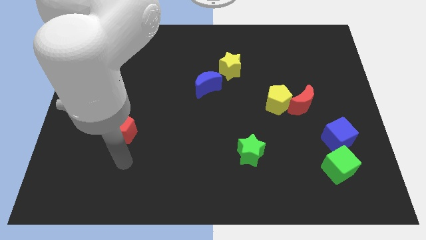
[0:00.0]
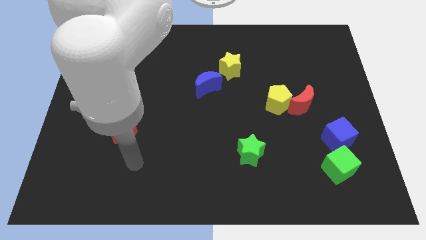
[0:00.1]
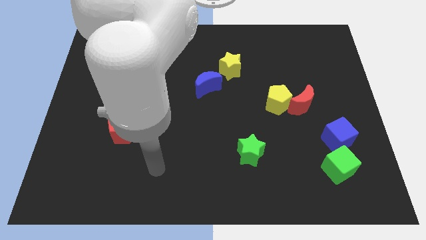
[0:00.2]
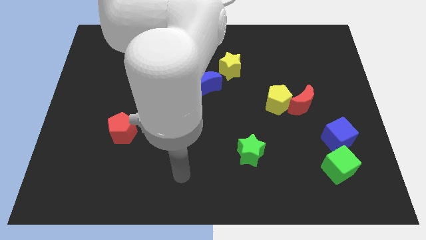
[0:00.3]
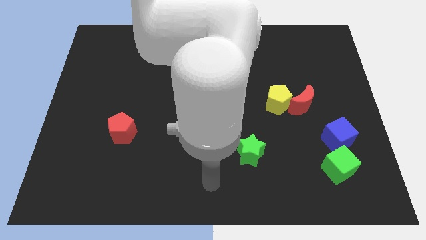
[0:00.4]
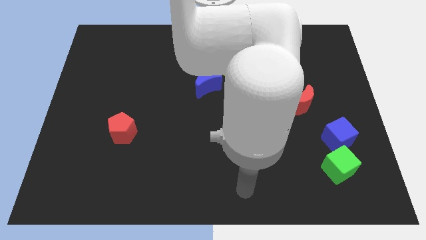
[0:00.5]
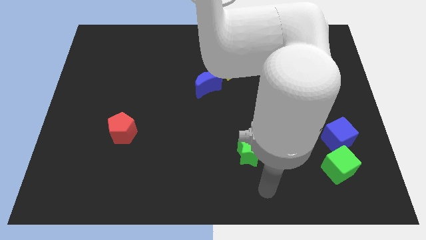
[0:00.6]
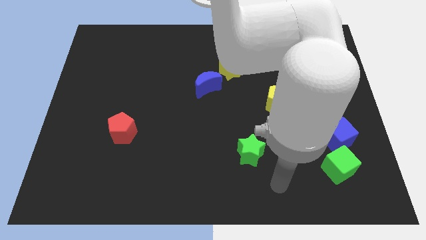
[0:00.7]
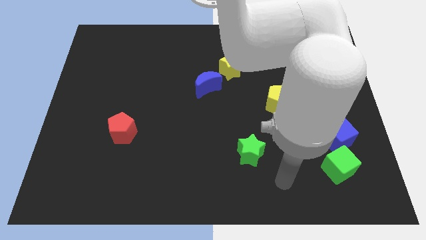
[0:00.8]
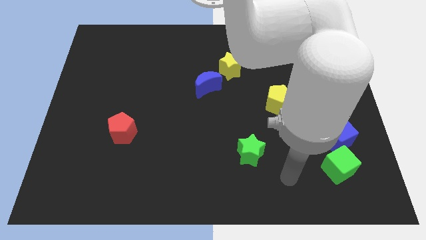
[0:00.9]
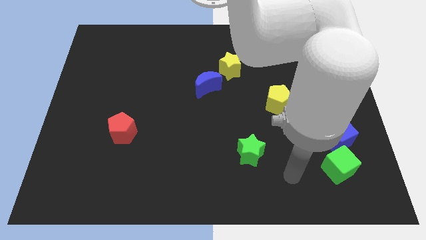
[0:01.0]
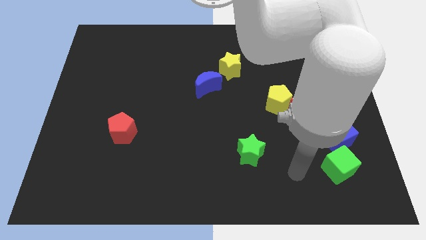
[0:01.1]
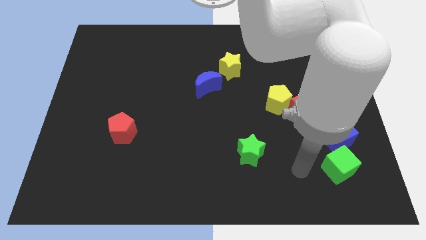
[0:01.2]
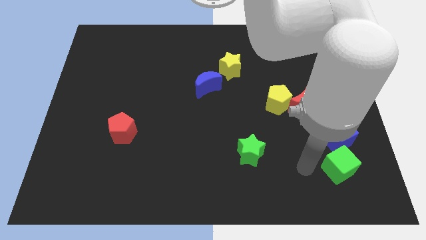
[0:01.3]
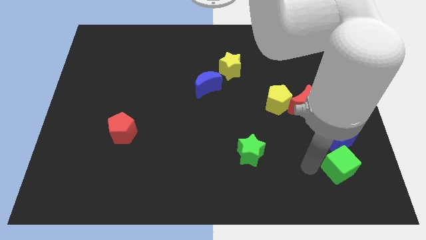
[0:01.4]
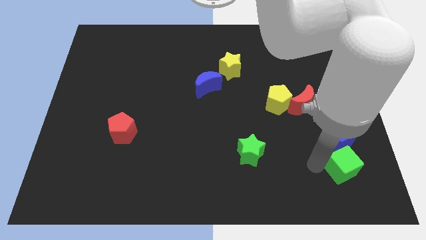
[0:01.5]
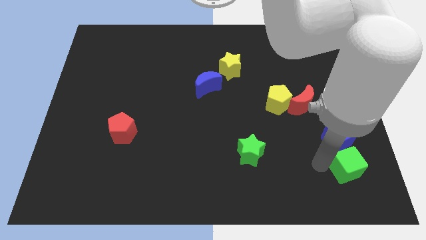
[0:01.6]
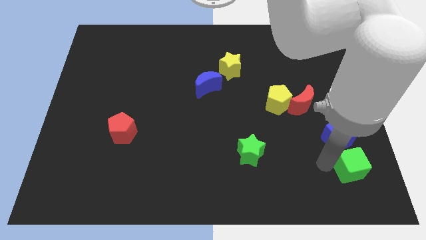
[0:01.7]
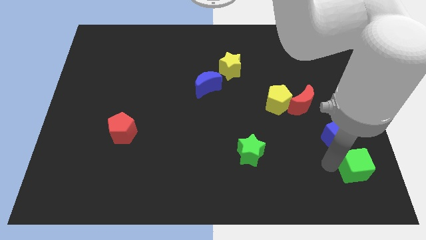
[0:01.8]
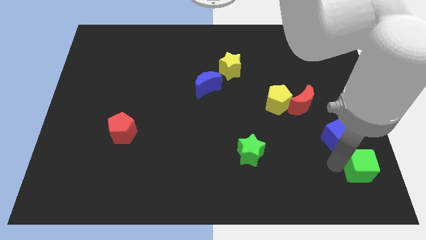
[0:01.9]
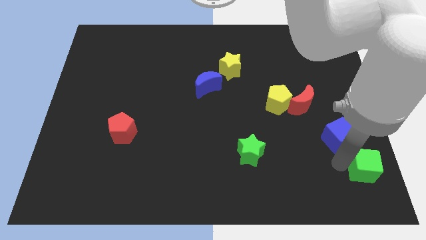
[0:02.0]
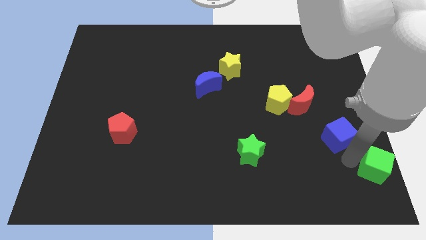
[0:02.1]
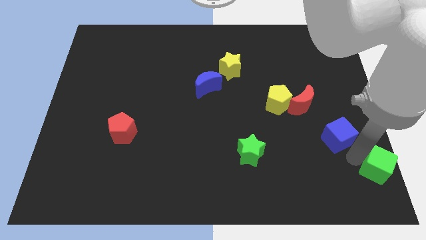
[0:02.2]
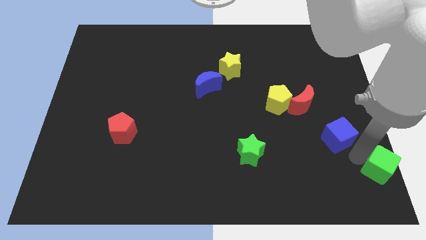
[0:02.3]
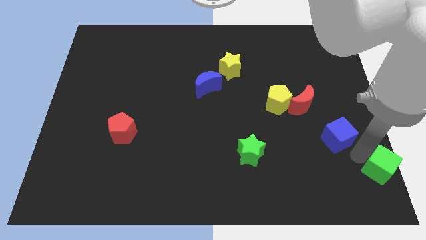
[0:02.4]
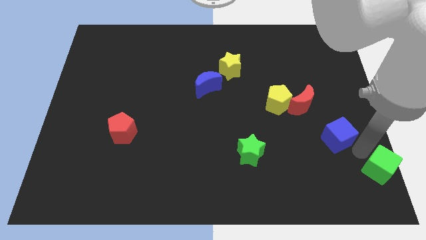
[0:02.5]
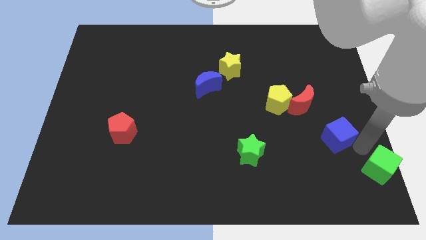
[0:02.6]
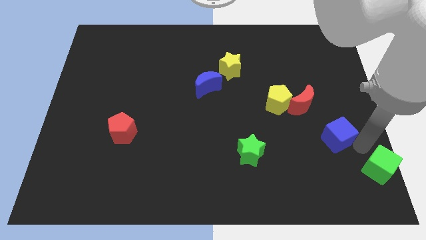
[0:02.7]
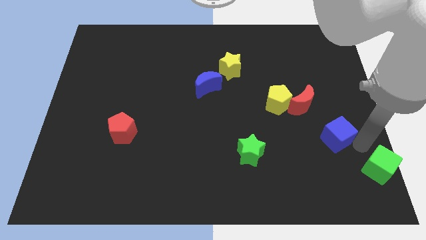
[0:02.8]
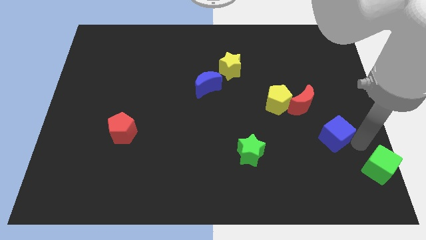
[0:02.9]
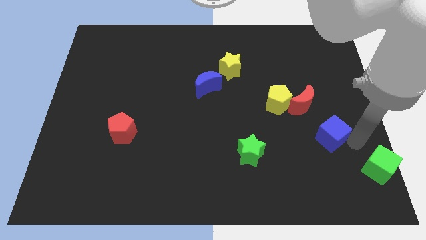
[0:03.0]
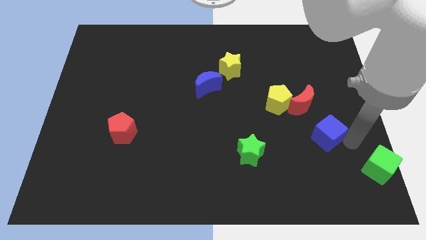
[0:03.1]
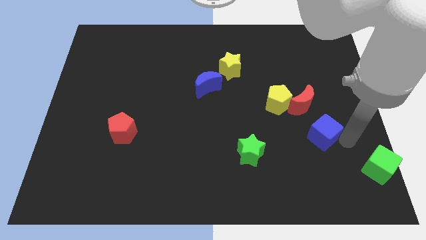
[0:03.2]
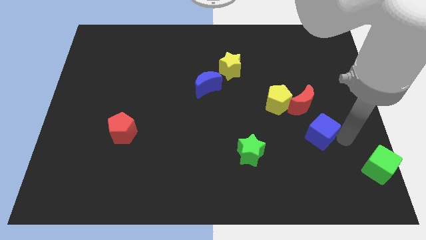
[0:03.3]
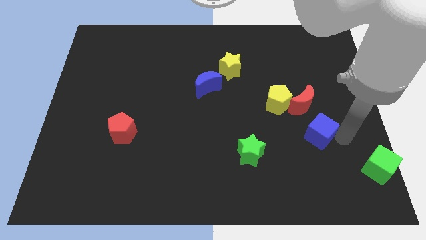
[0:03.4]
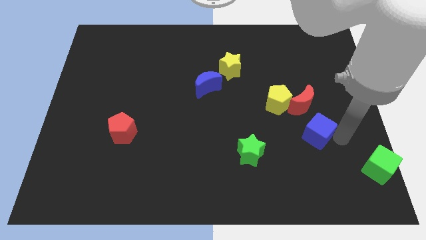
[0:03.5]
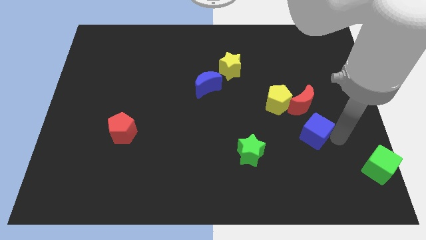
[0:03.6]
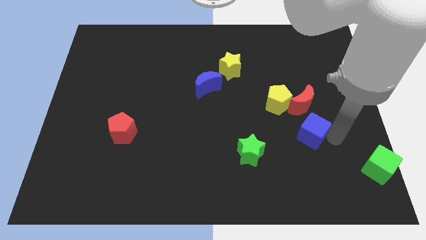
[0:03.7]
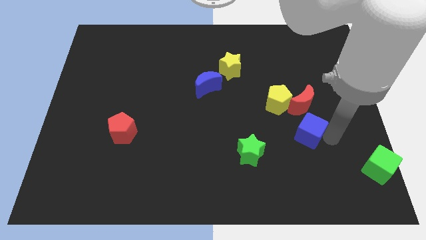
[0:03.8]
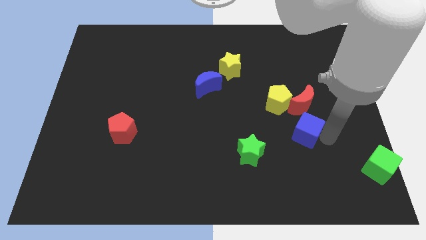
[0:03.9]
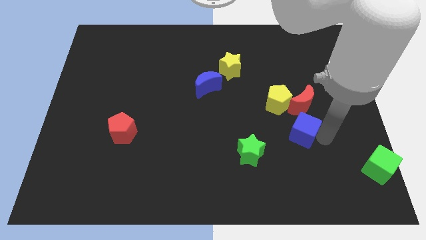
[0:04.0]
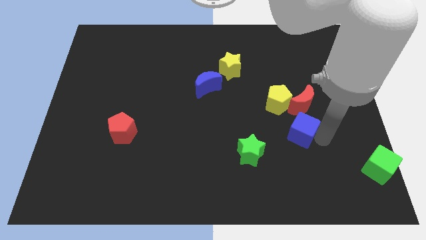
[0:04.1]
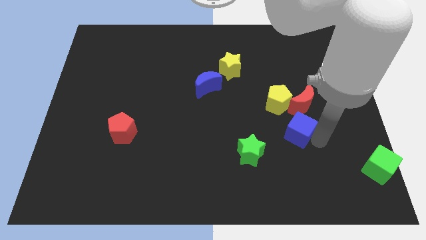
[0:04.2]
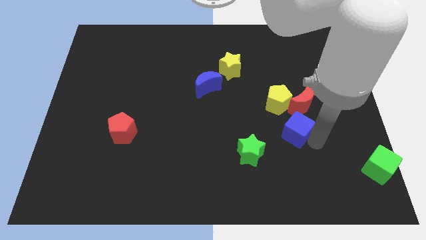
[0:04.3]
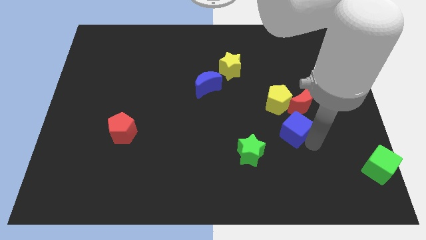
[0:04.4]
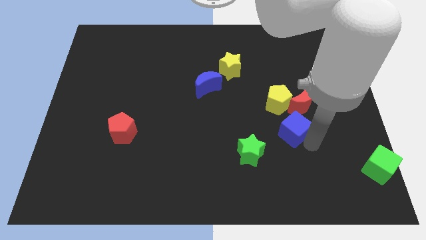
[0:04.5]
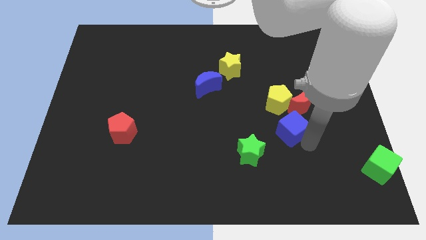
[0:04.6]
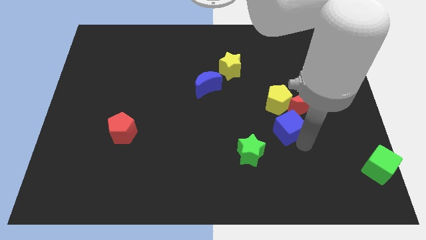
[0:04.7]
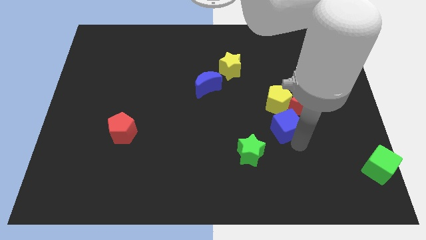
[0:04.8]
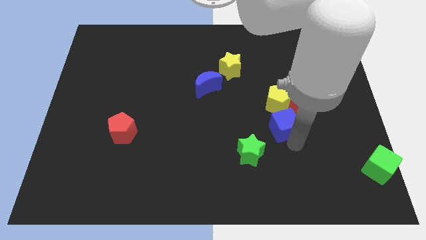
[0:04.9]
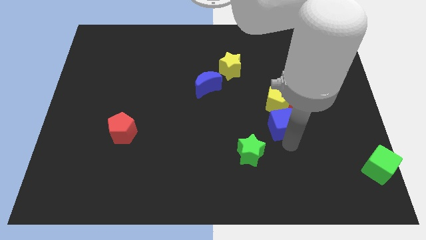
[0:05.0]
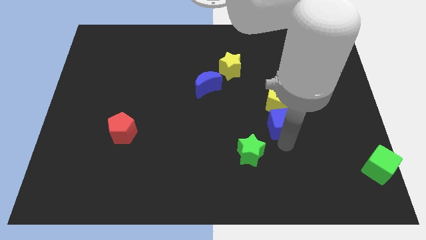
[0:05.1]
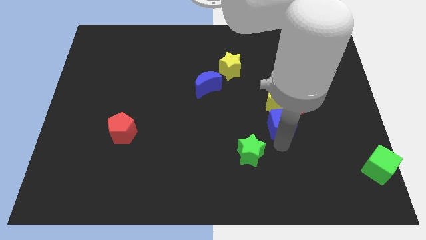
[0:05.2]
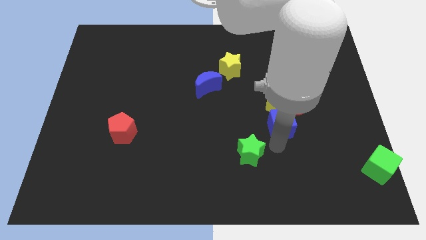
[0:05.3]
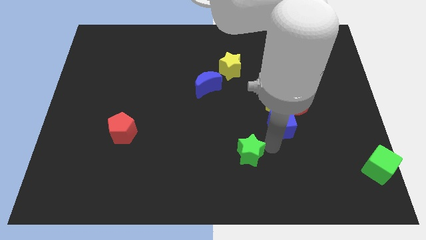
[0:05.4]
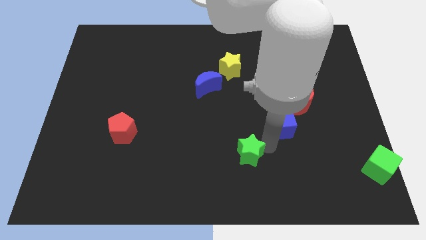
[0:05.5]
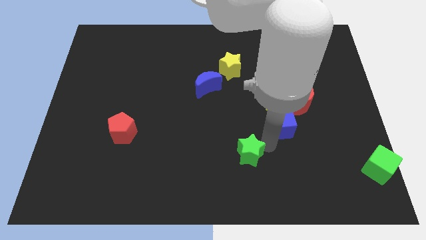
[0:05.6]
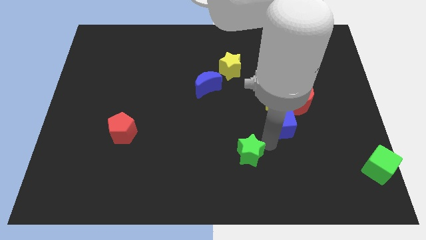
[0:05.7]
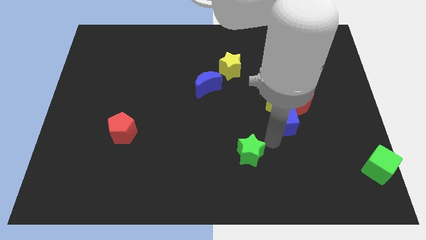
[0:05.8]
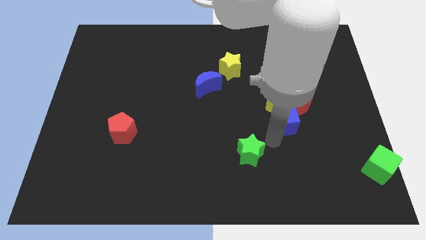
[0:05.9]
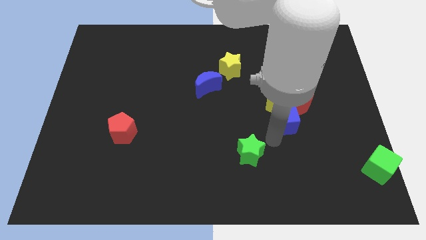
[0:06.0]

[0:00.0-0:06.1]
push the blue cube to the yellow pentagon

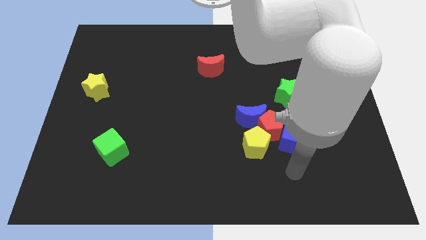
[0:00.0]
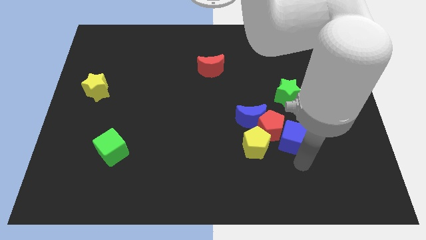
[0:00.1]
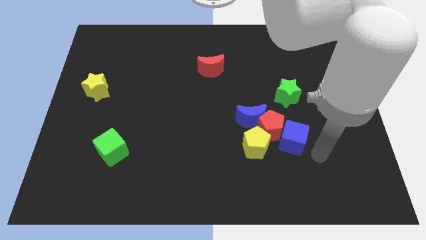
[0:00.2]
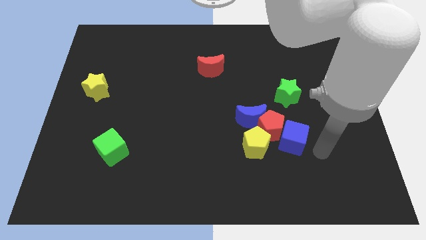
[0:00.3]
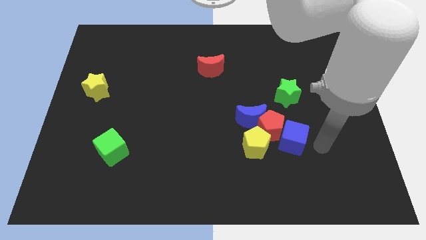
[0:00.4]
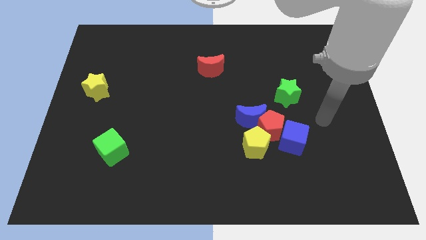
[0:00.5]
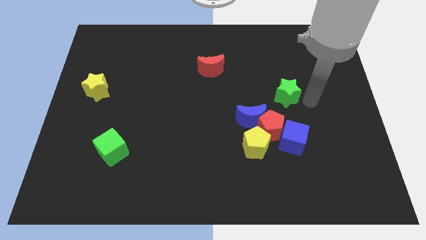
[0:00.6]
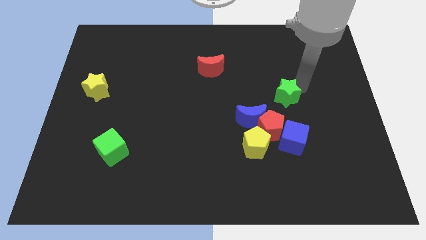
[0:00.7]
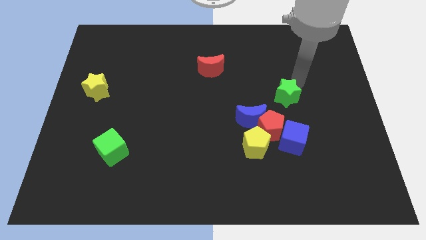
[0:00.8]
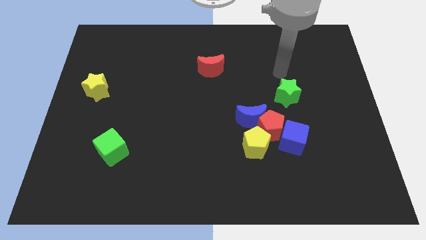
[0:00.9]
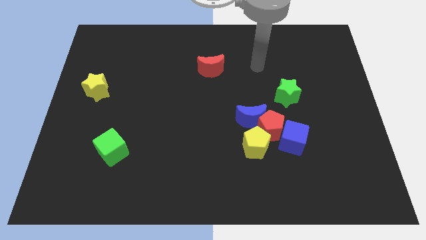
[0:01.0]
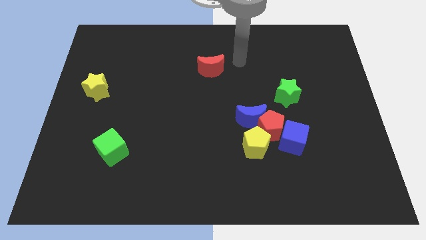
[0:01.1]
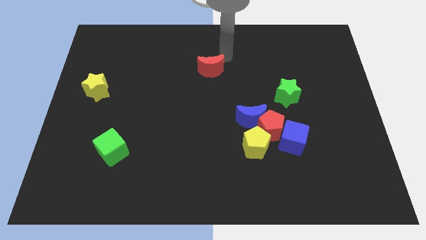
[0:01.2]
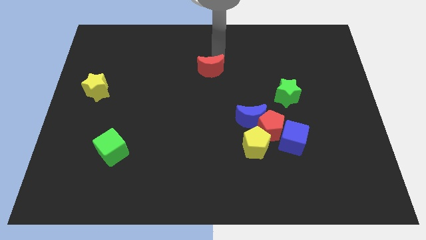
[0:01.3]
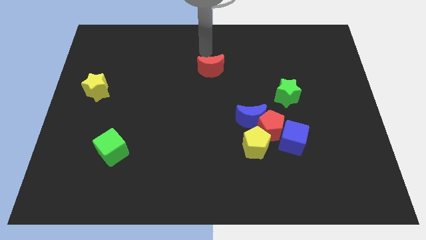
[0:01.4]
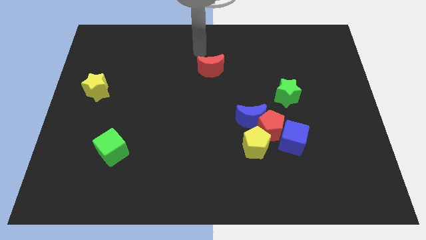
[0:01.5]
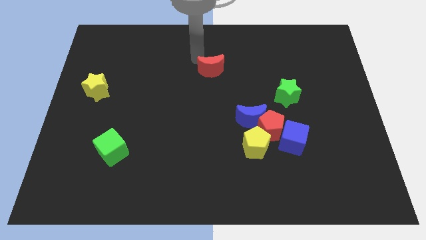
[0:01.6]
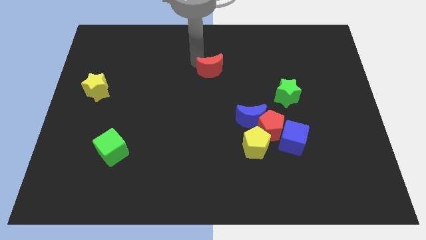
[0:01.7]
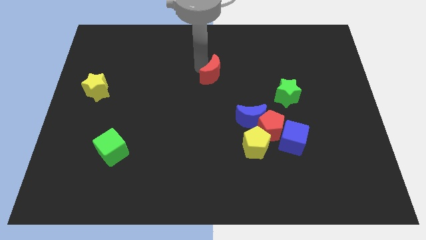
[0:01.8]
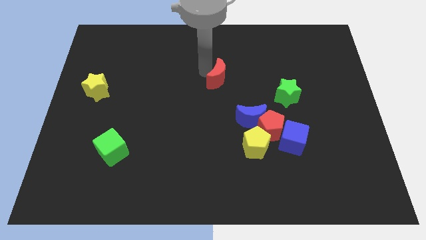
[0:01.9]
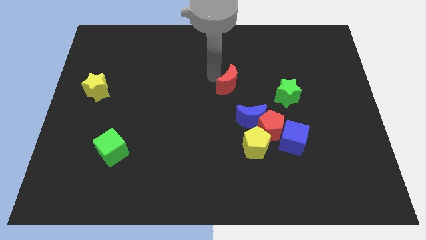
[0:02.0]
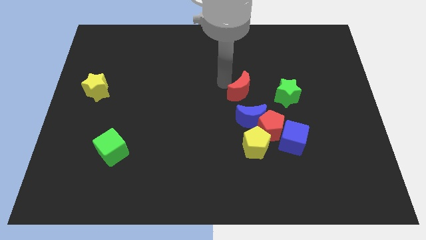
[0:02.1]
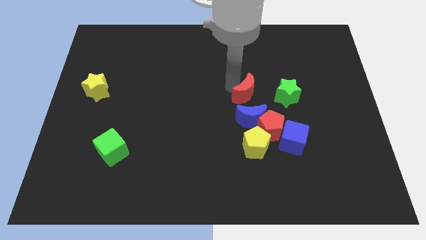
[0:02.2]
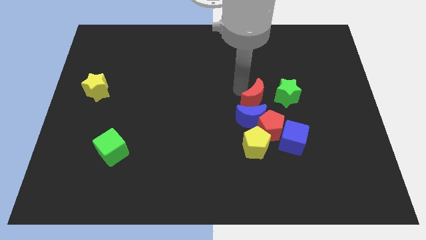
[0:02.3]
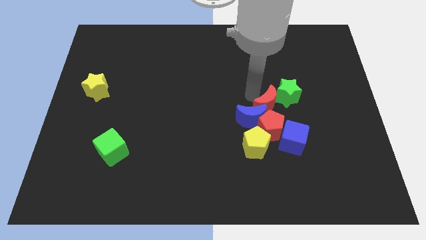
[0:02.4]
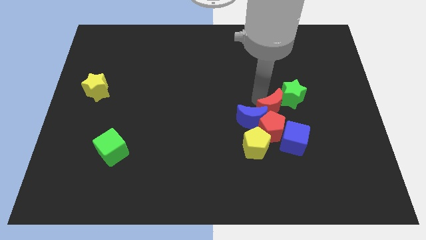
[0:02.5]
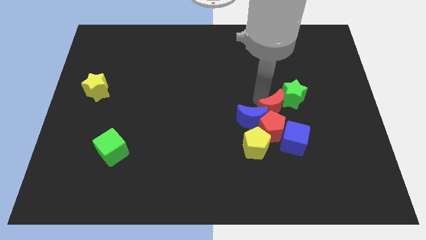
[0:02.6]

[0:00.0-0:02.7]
move the red moon next to the green star
